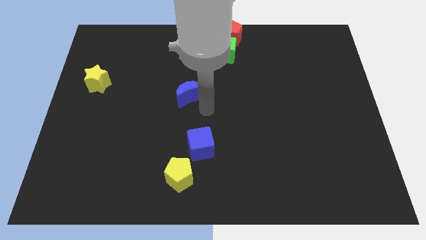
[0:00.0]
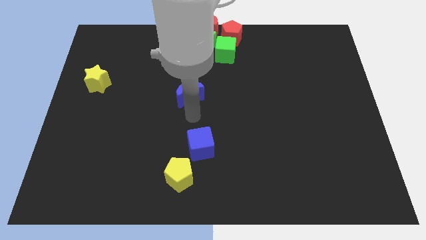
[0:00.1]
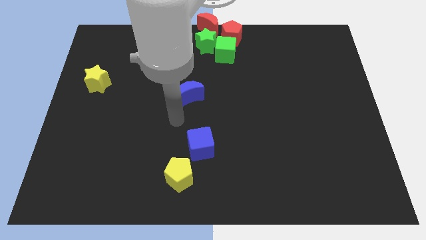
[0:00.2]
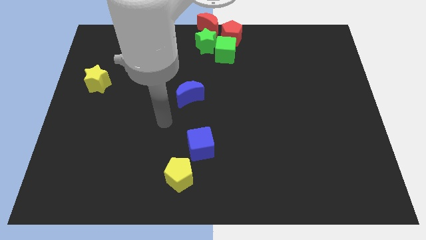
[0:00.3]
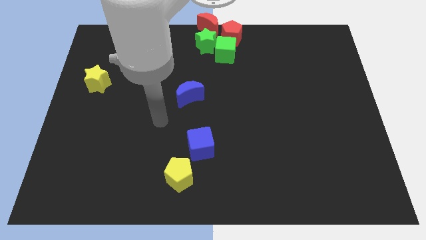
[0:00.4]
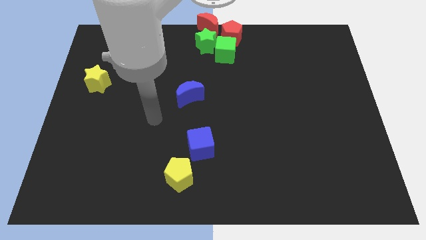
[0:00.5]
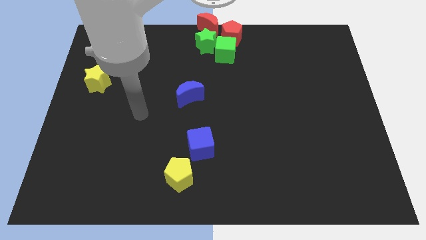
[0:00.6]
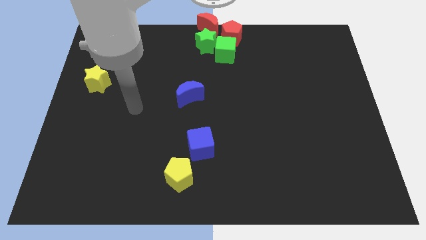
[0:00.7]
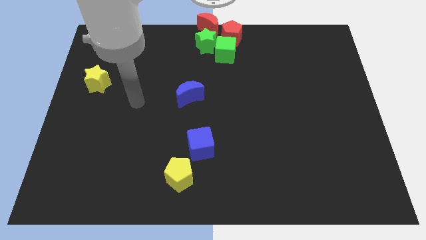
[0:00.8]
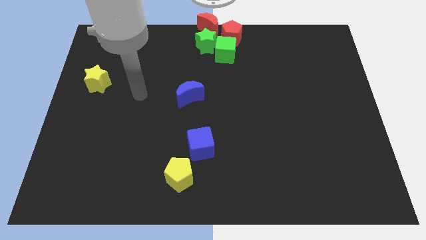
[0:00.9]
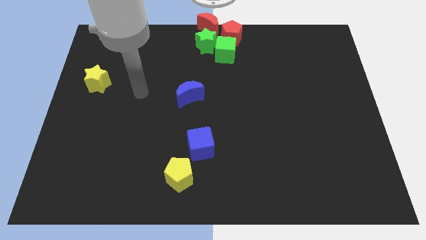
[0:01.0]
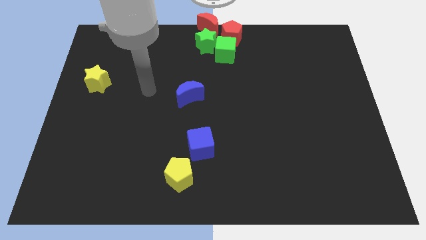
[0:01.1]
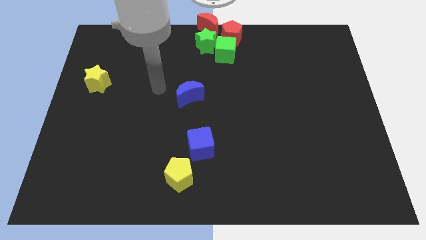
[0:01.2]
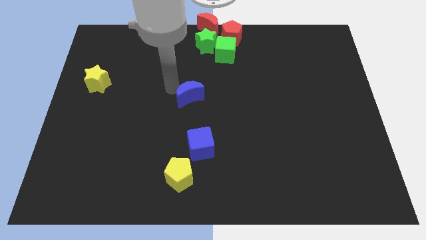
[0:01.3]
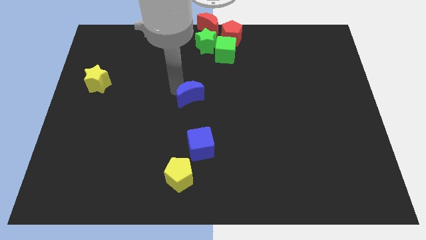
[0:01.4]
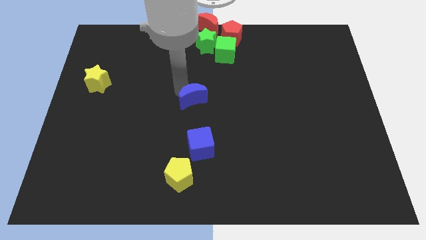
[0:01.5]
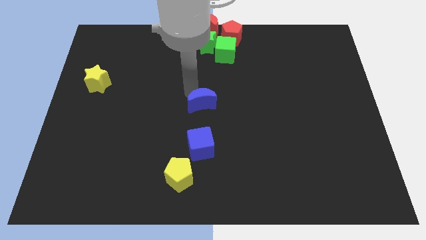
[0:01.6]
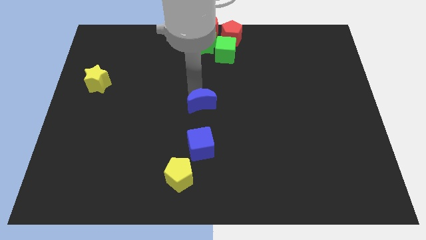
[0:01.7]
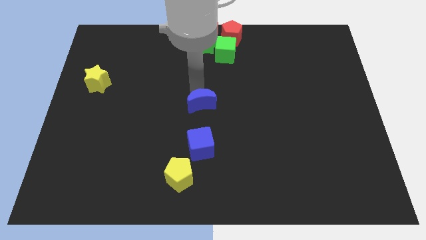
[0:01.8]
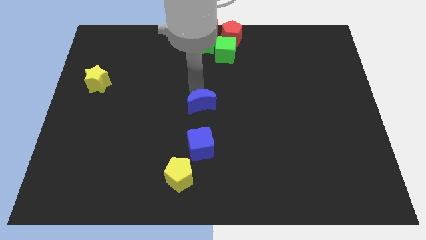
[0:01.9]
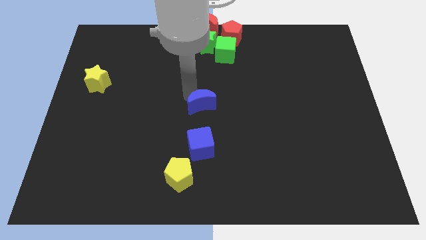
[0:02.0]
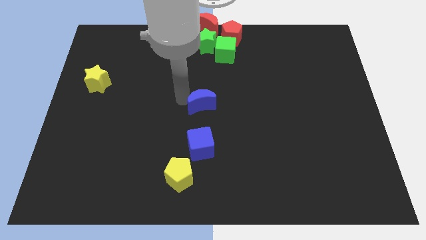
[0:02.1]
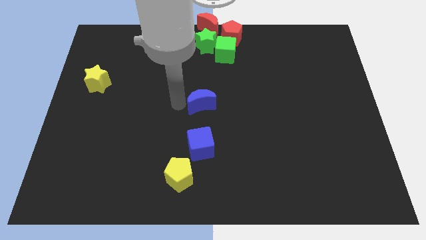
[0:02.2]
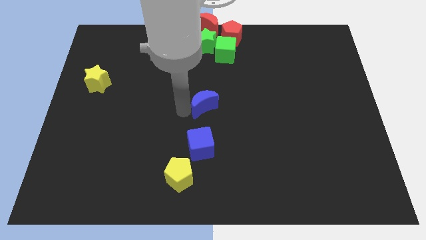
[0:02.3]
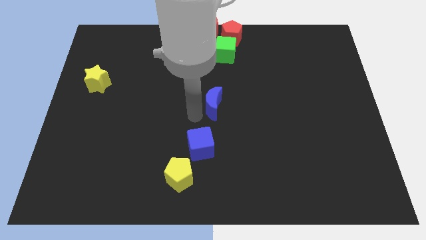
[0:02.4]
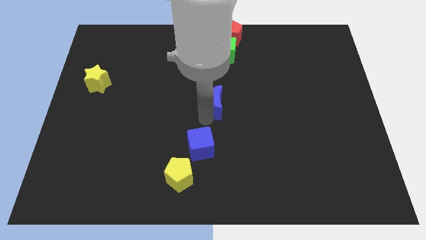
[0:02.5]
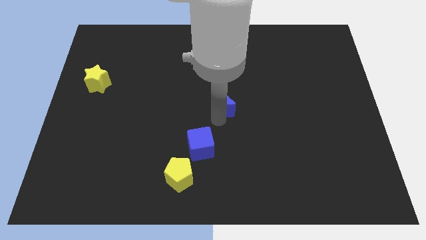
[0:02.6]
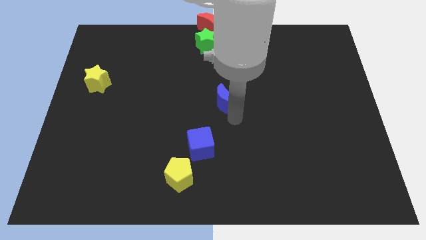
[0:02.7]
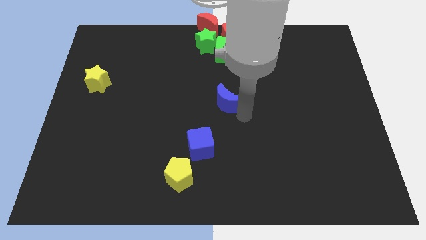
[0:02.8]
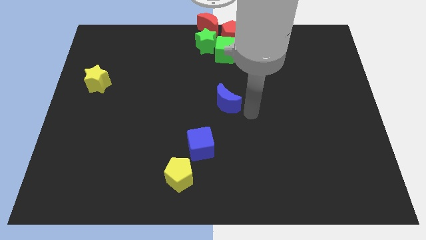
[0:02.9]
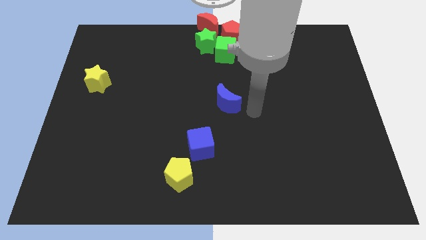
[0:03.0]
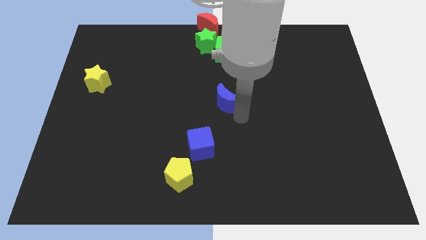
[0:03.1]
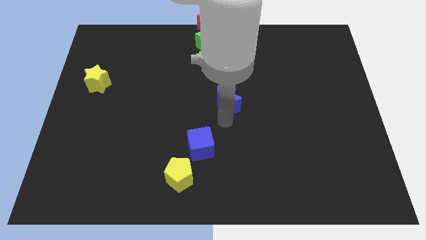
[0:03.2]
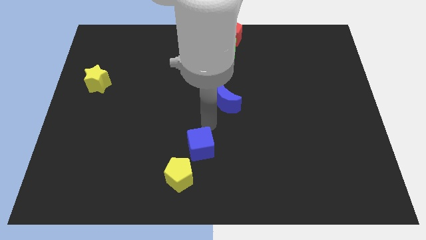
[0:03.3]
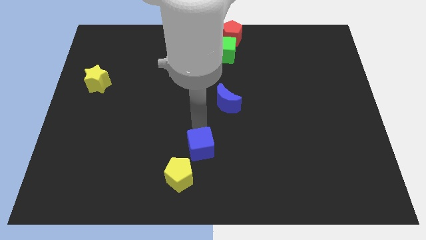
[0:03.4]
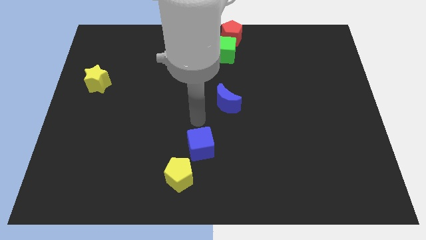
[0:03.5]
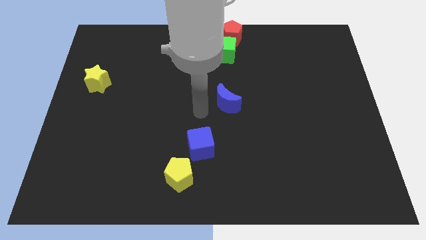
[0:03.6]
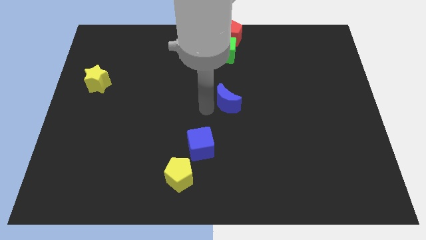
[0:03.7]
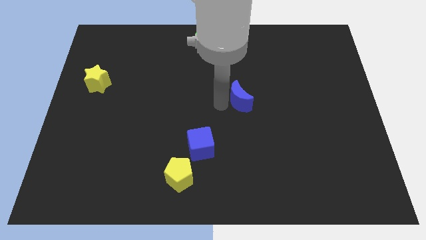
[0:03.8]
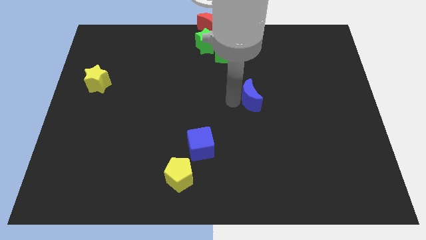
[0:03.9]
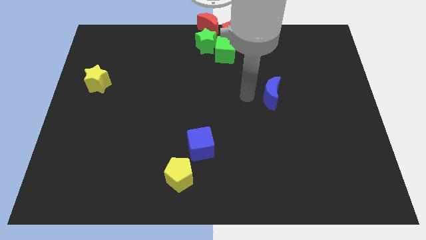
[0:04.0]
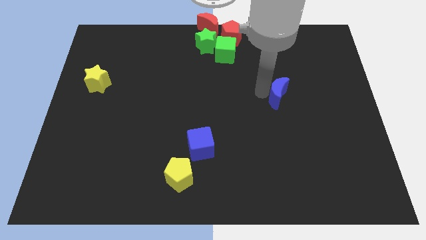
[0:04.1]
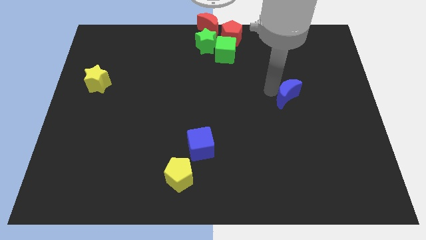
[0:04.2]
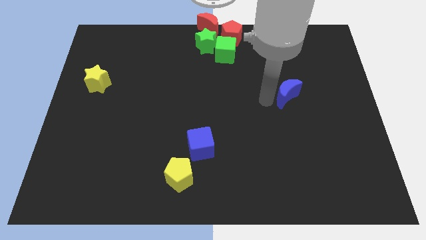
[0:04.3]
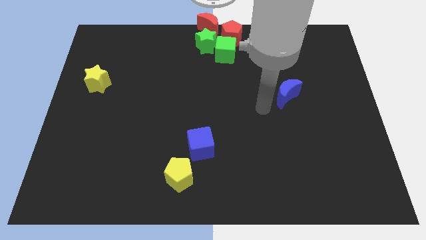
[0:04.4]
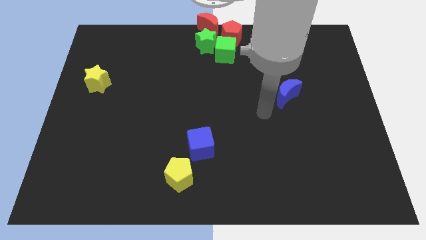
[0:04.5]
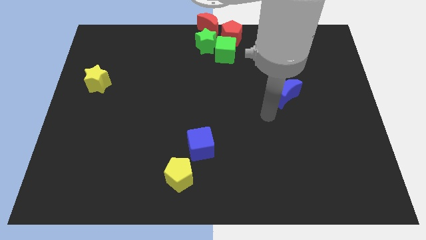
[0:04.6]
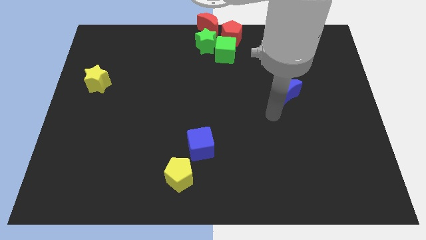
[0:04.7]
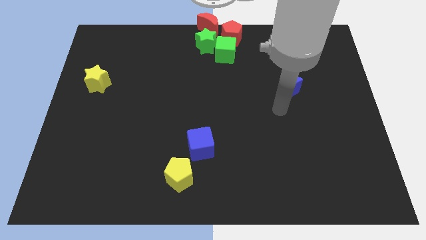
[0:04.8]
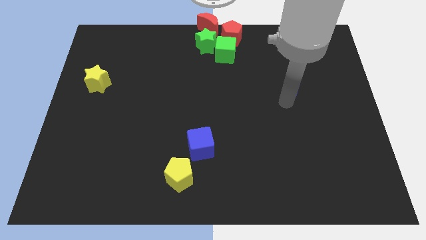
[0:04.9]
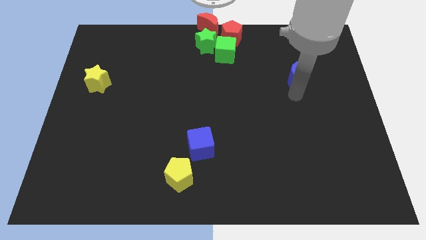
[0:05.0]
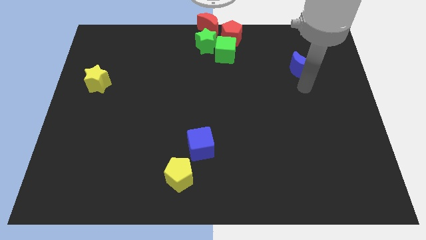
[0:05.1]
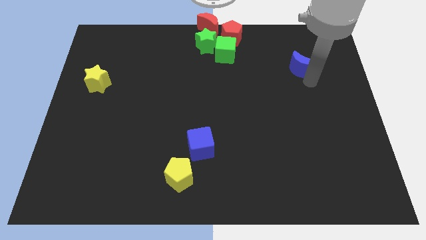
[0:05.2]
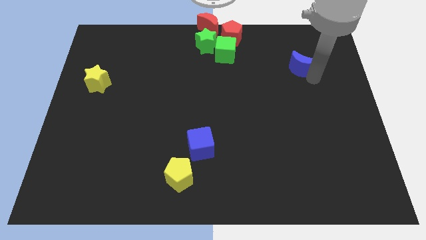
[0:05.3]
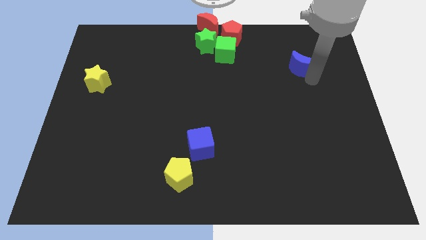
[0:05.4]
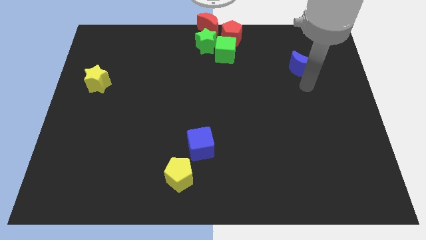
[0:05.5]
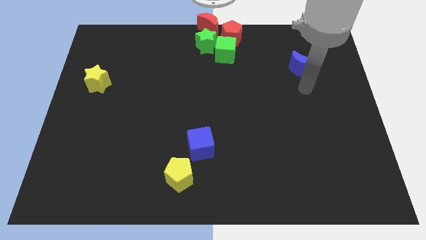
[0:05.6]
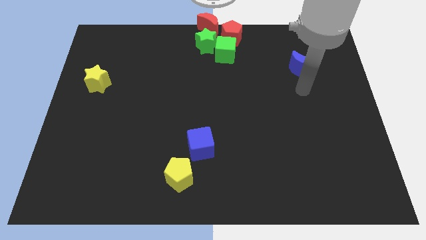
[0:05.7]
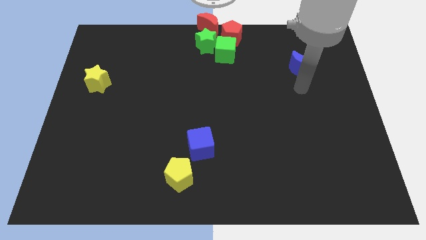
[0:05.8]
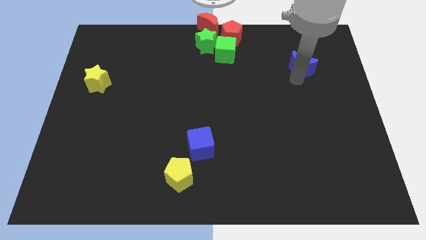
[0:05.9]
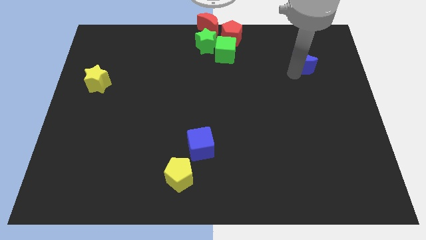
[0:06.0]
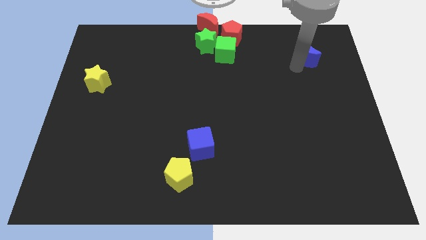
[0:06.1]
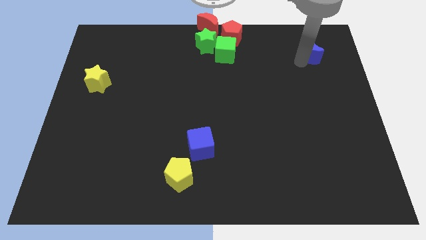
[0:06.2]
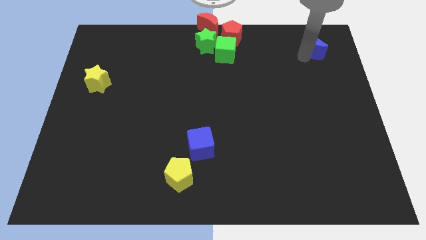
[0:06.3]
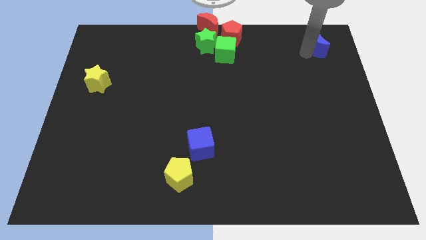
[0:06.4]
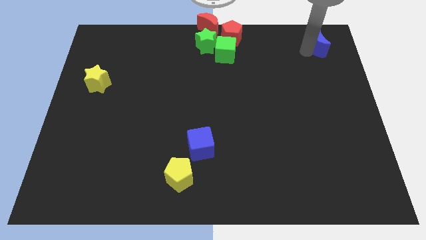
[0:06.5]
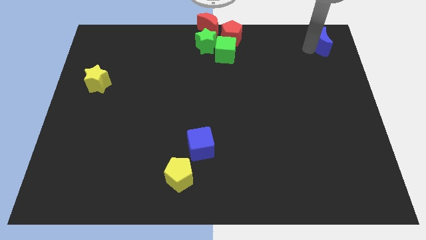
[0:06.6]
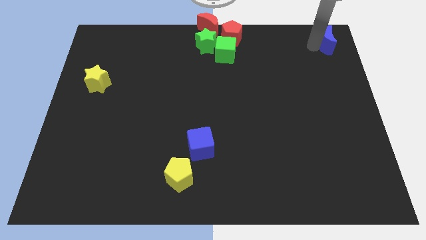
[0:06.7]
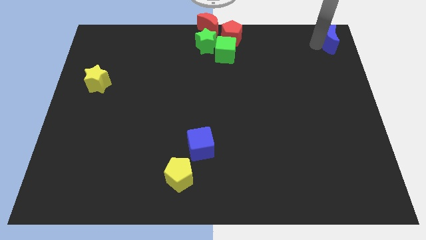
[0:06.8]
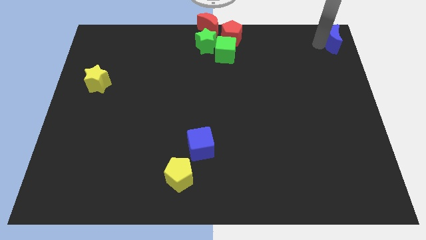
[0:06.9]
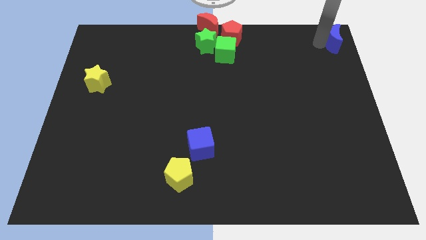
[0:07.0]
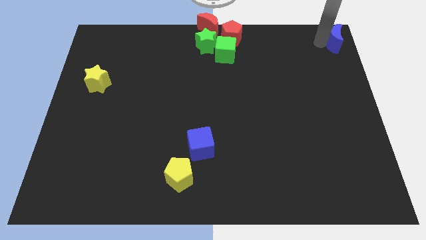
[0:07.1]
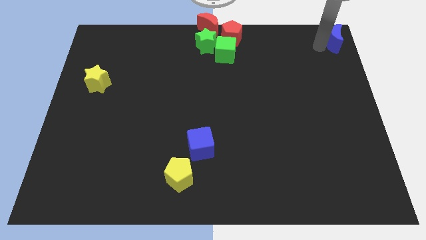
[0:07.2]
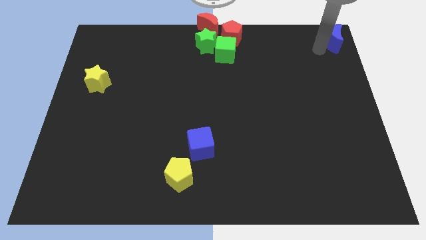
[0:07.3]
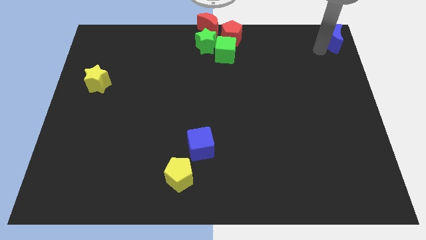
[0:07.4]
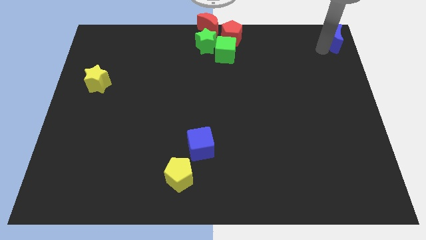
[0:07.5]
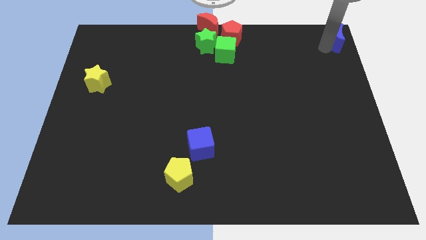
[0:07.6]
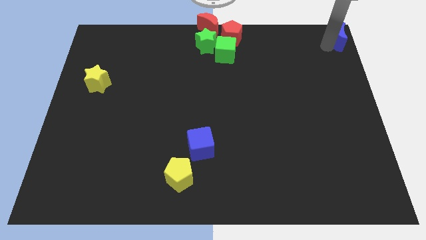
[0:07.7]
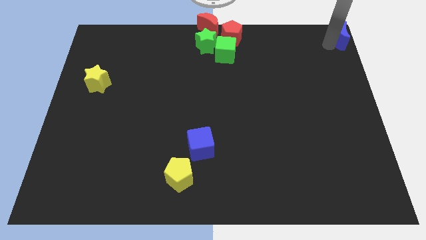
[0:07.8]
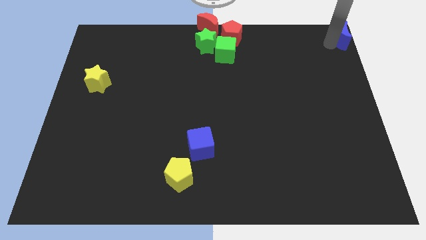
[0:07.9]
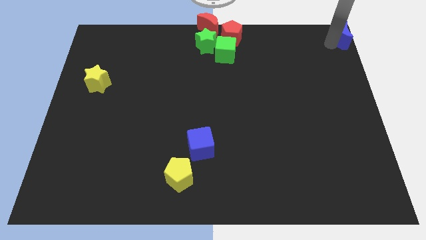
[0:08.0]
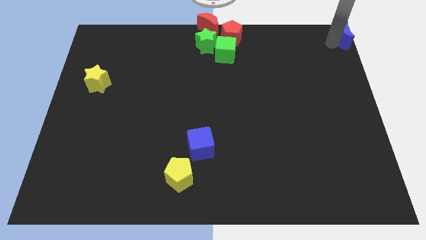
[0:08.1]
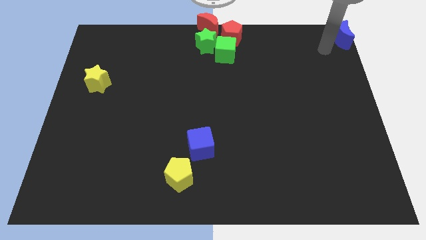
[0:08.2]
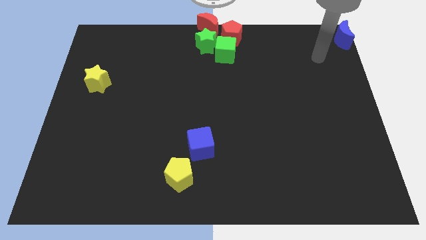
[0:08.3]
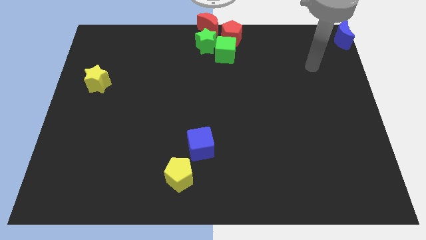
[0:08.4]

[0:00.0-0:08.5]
move the blue crescent towards the top right corner of the board

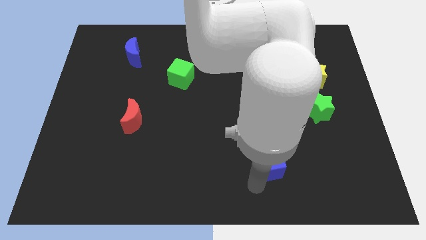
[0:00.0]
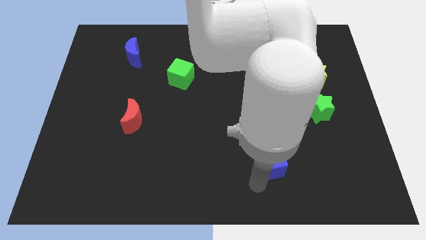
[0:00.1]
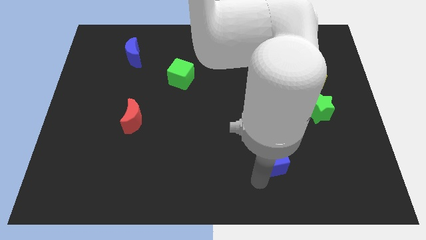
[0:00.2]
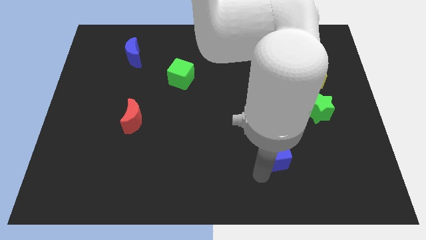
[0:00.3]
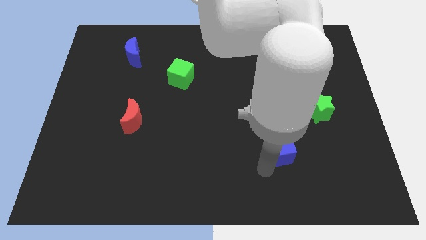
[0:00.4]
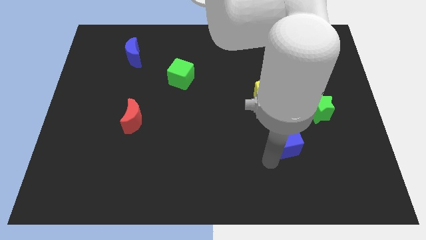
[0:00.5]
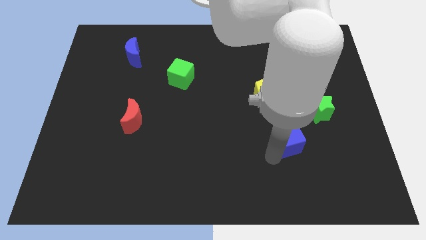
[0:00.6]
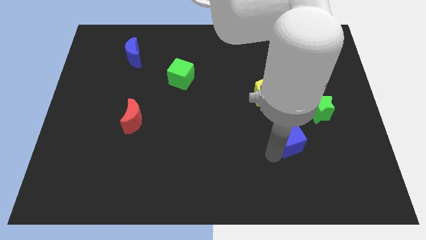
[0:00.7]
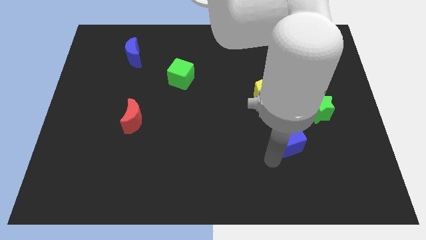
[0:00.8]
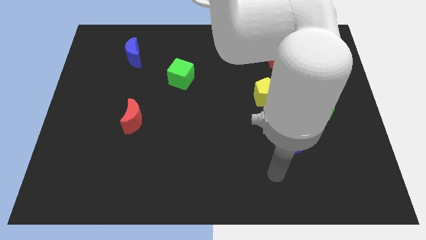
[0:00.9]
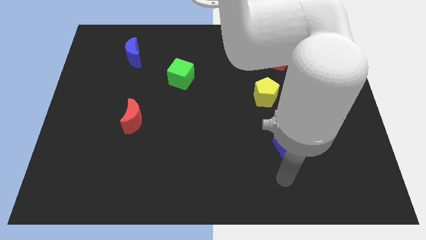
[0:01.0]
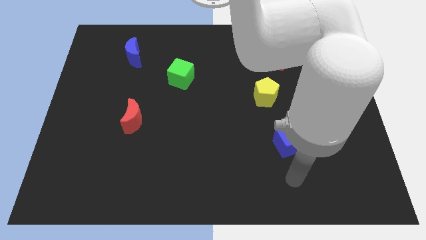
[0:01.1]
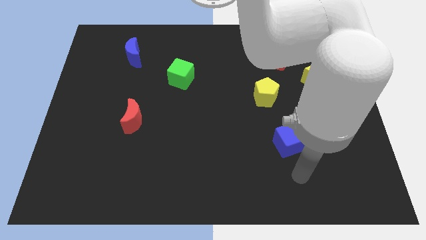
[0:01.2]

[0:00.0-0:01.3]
move the blue cube to the top of the board
